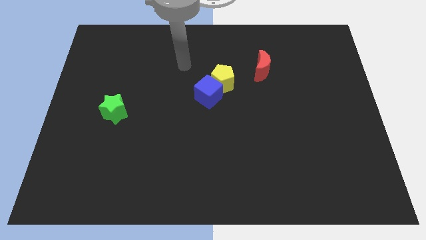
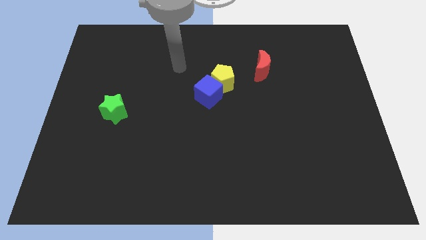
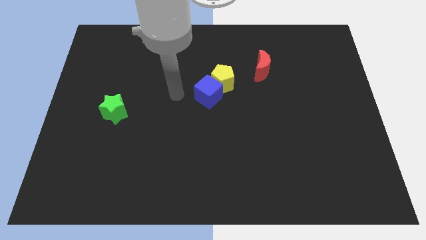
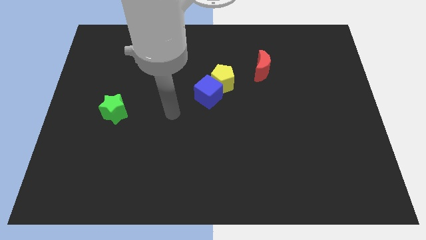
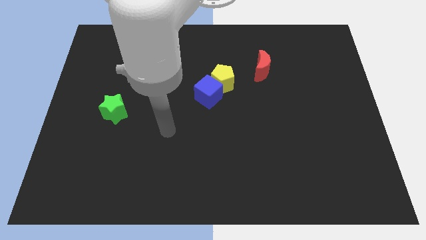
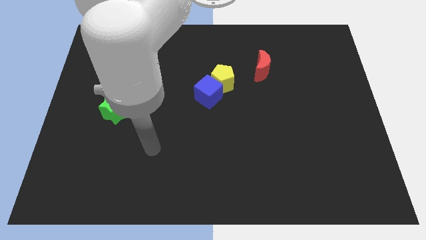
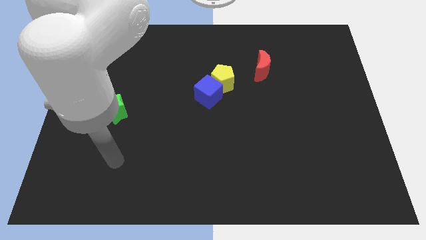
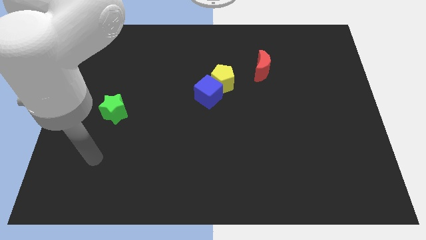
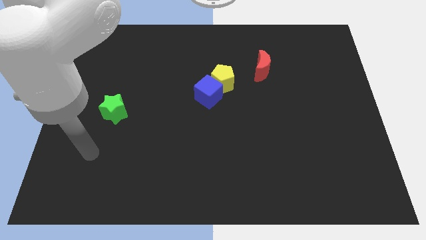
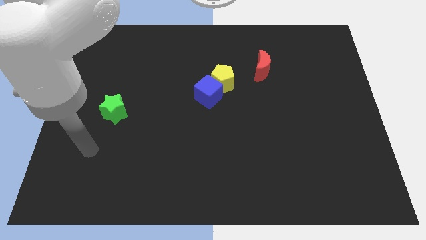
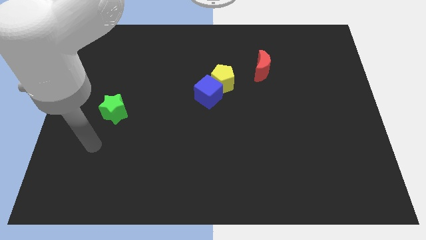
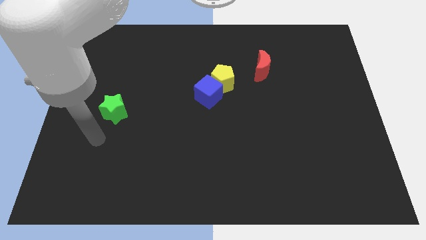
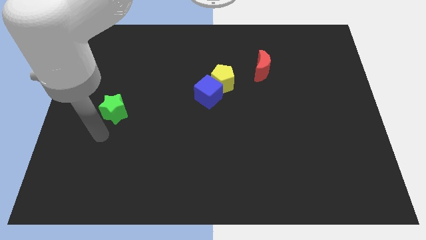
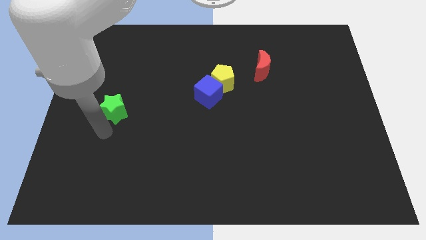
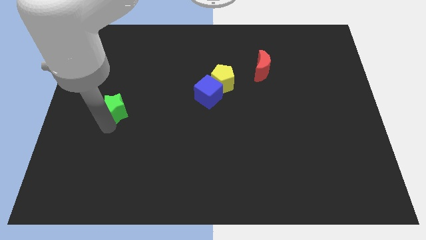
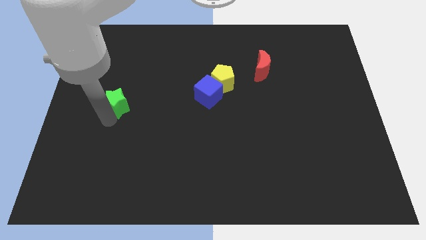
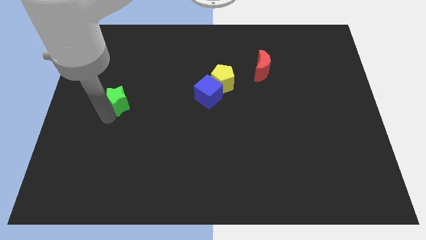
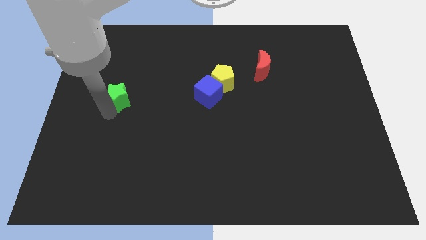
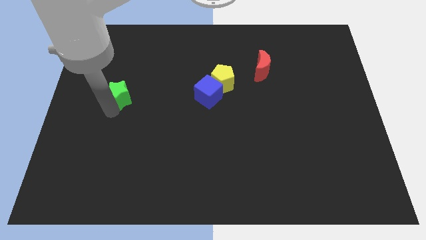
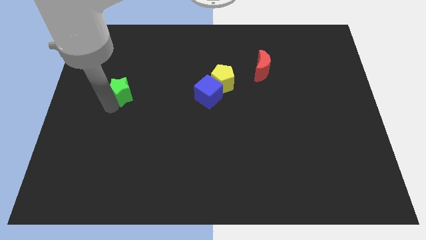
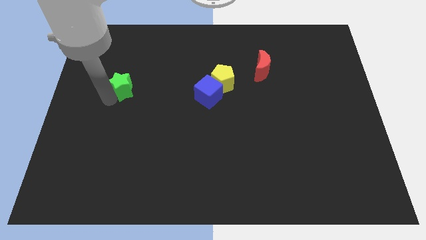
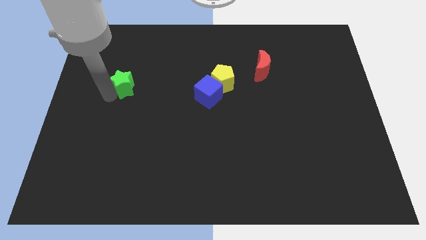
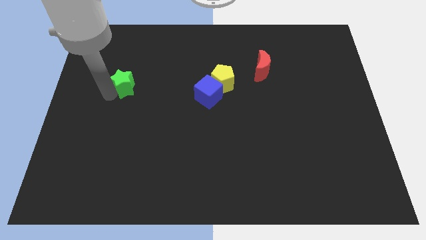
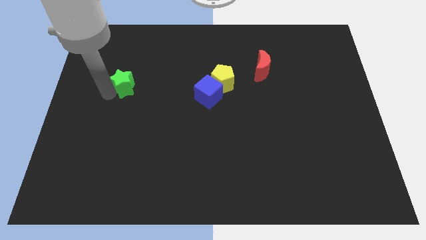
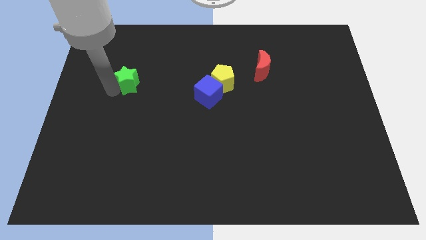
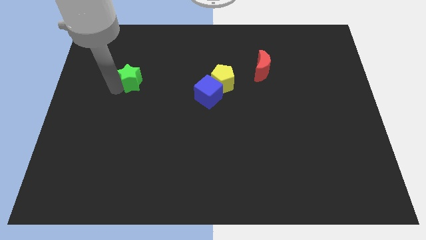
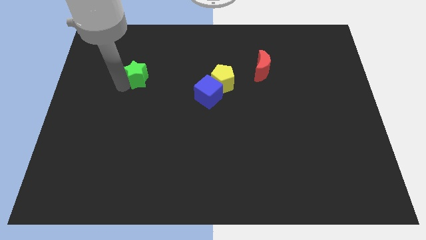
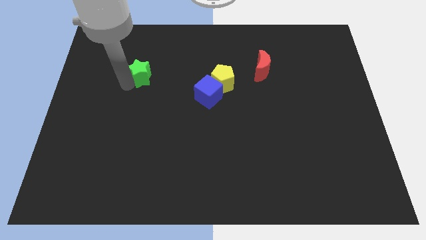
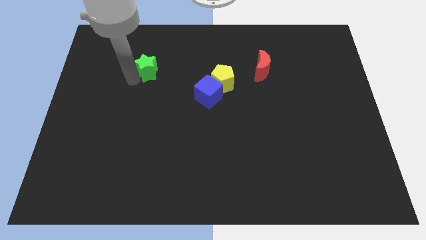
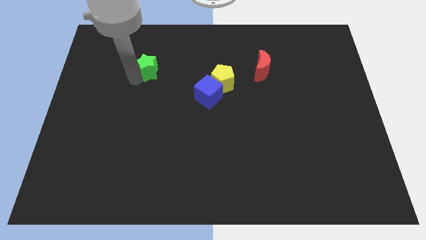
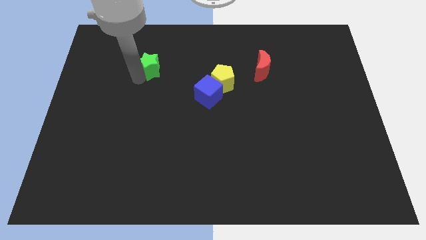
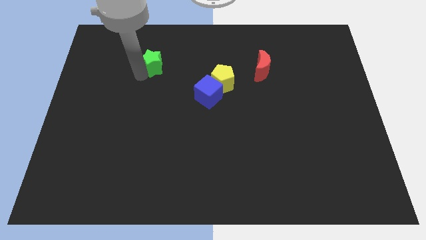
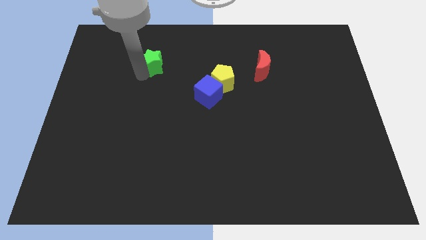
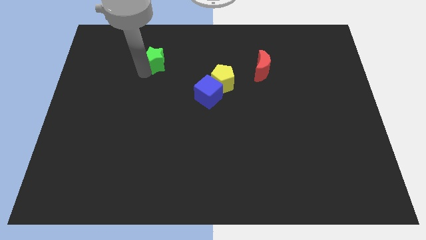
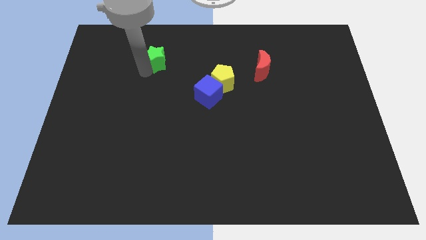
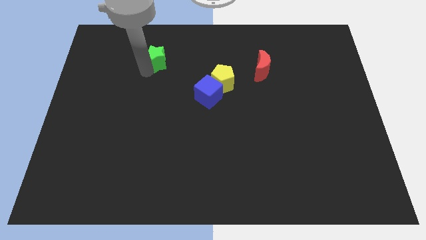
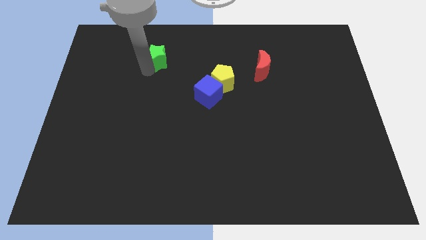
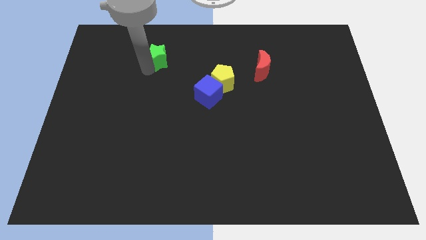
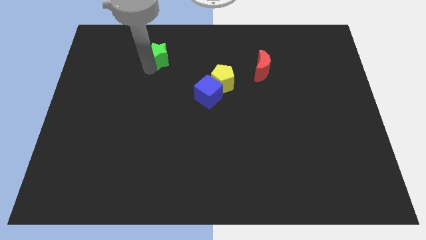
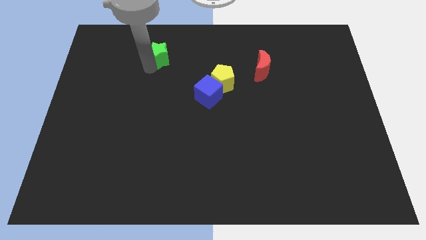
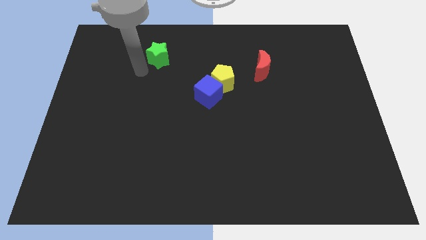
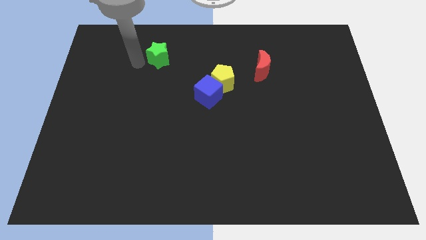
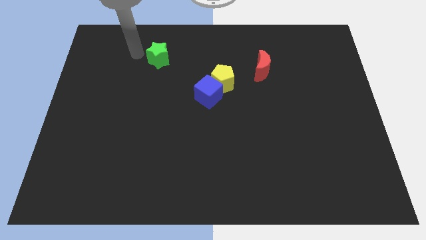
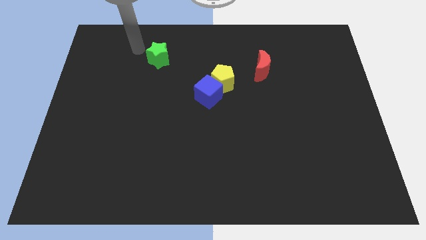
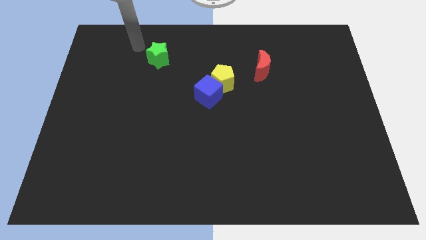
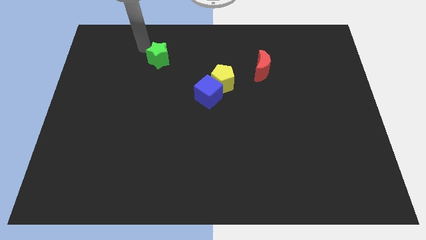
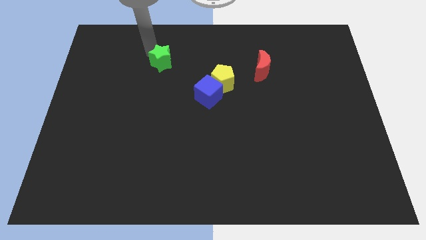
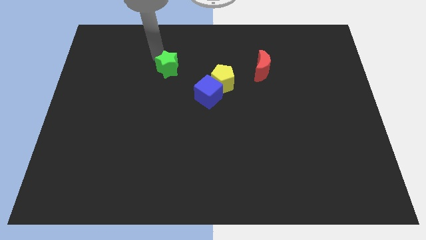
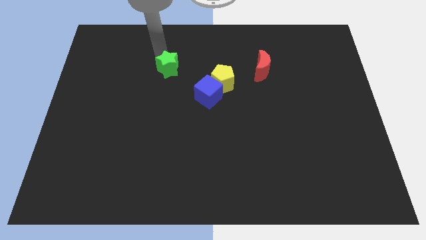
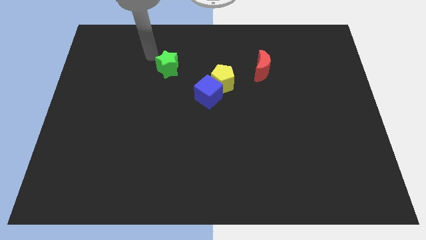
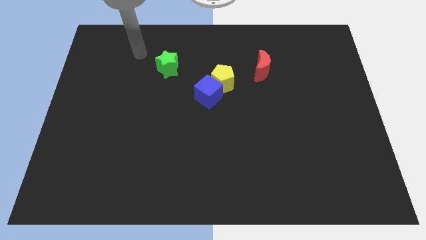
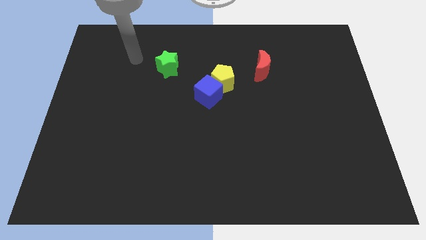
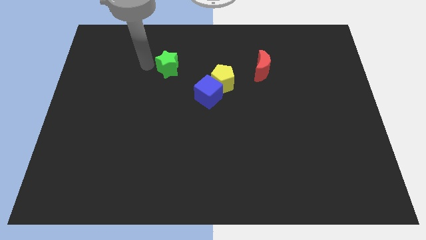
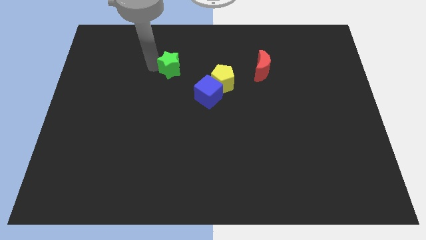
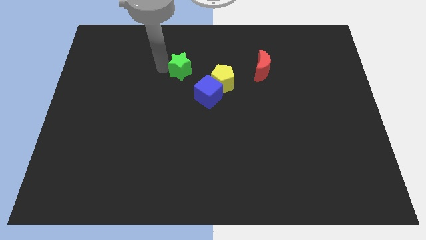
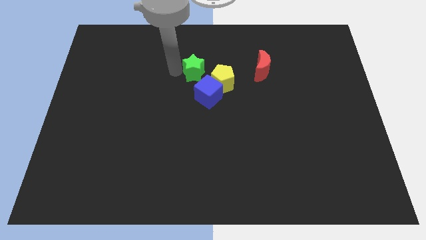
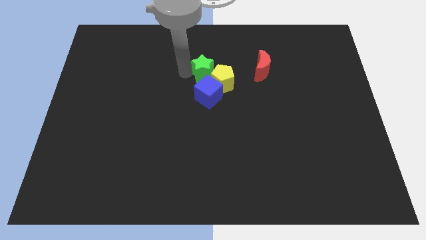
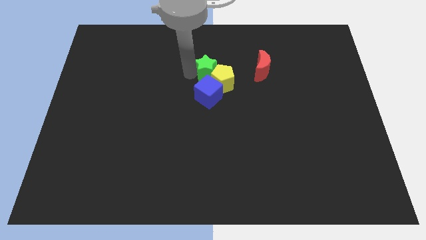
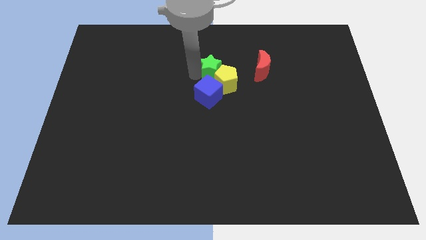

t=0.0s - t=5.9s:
put the star next to the yellow pentagon

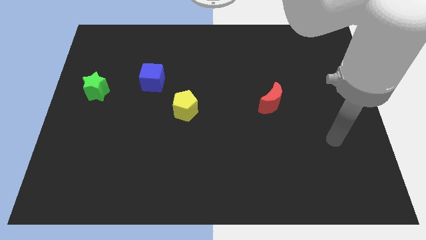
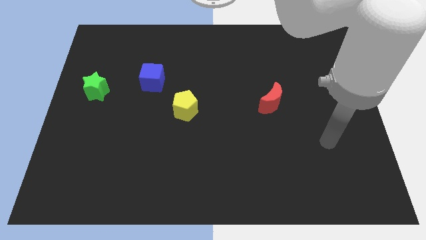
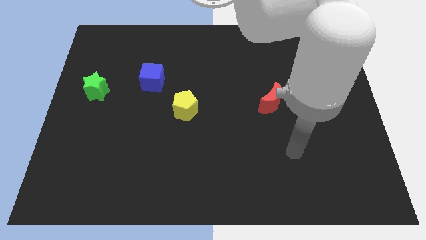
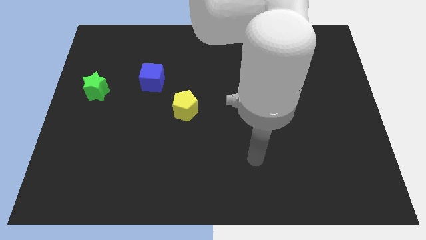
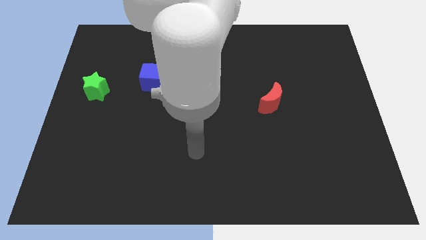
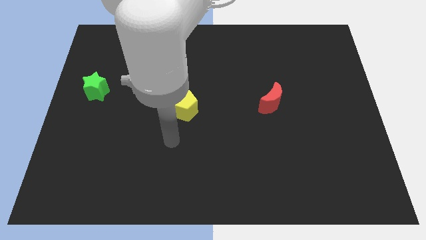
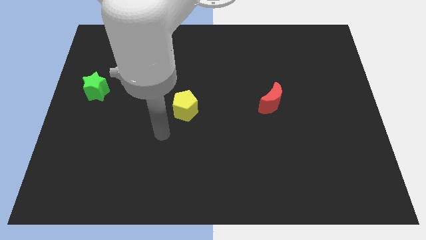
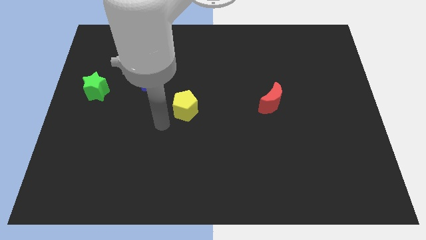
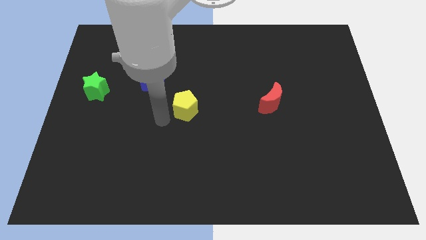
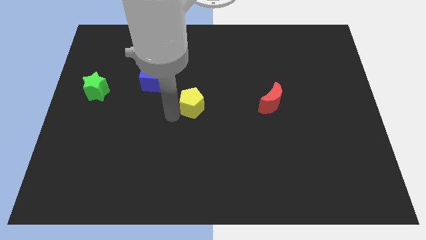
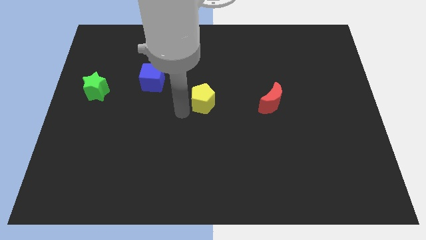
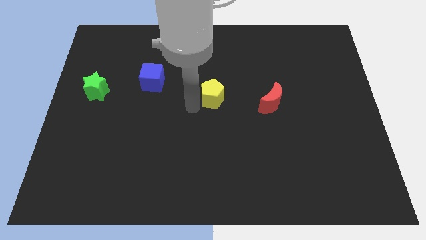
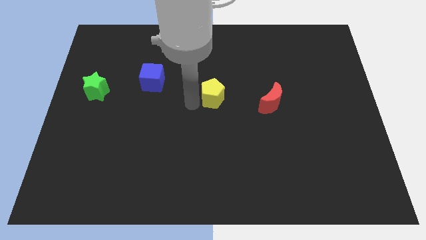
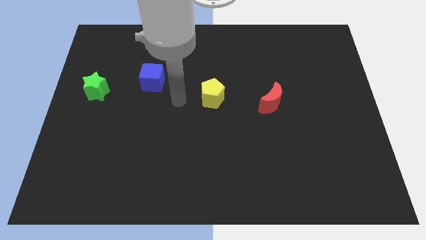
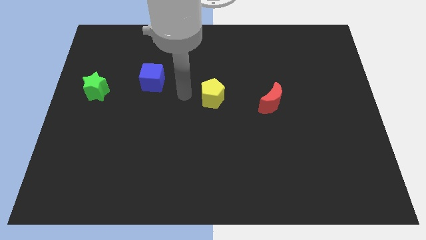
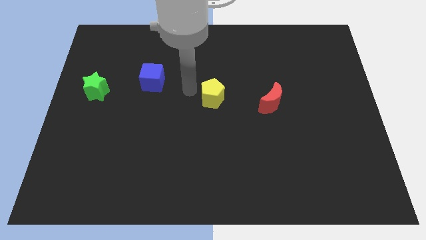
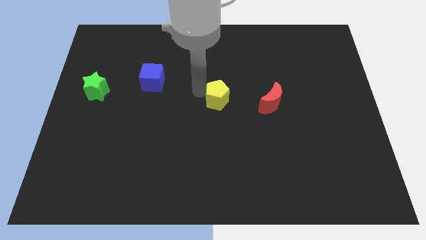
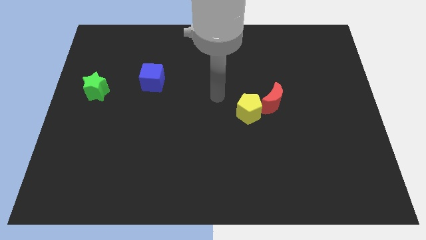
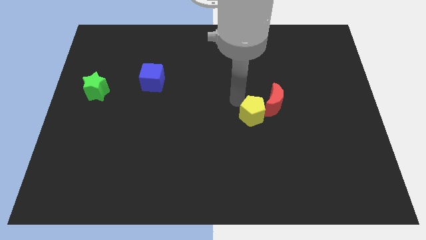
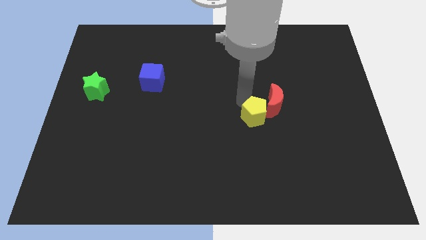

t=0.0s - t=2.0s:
push the pentagon to the moon

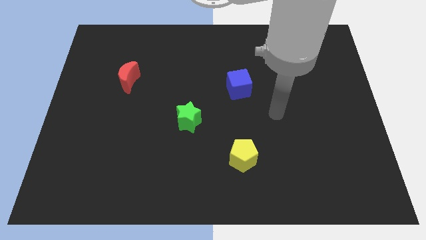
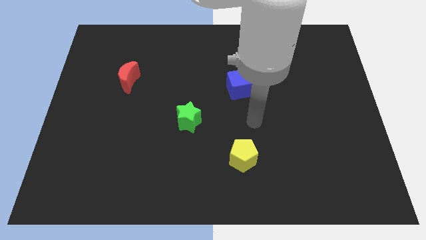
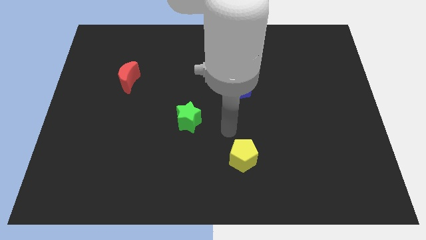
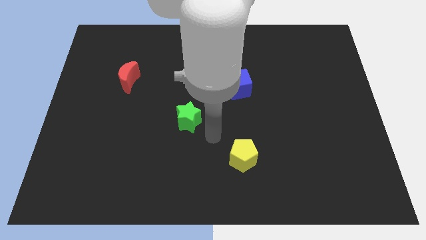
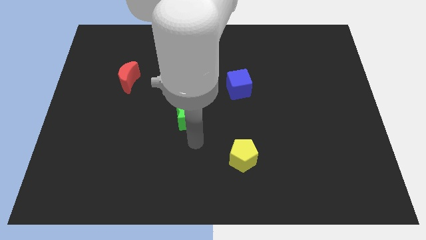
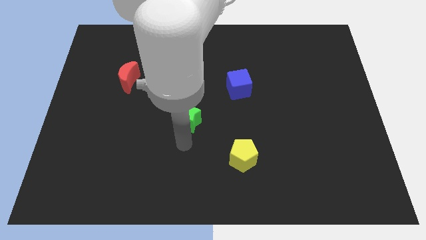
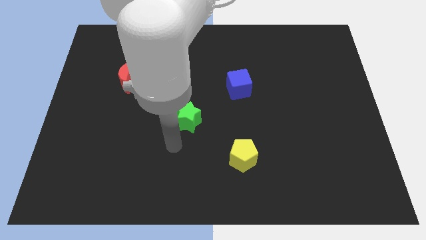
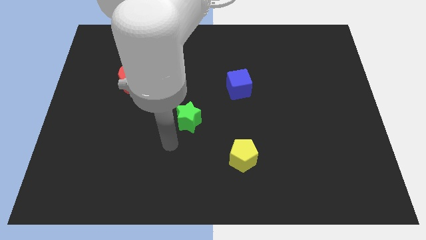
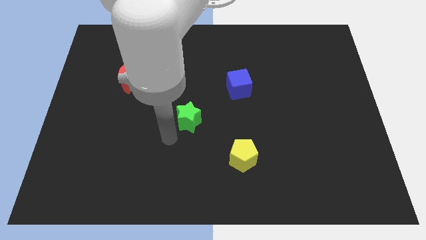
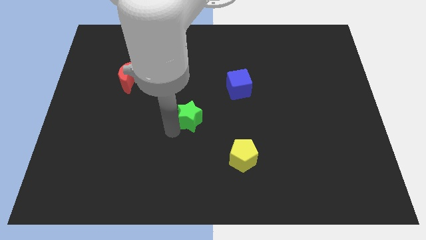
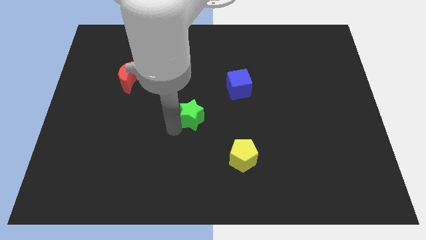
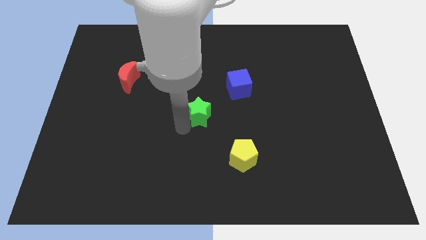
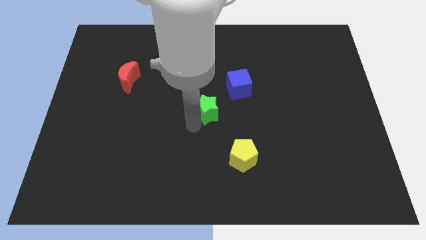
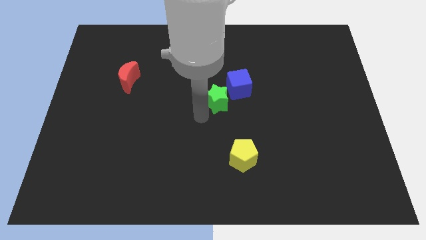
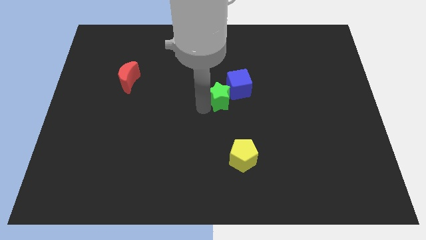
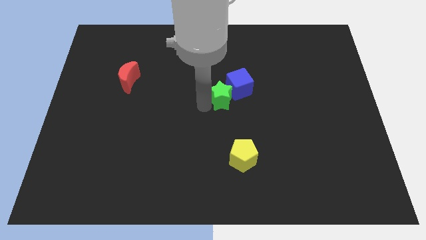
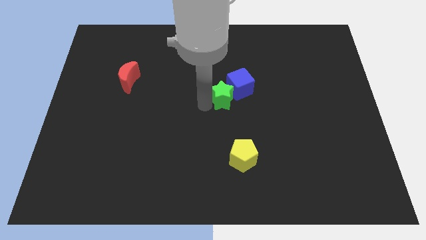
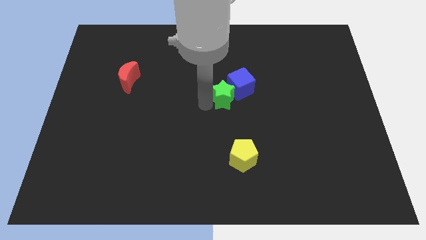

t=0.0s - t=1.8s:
move the green star close to the blue cube
